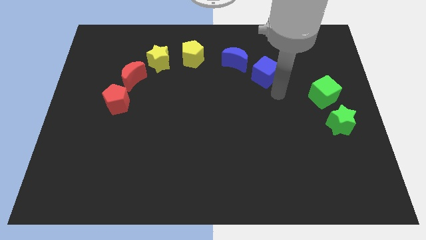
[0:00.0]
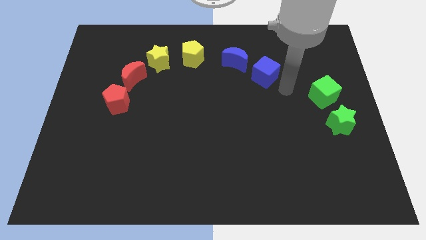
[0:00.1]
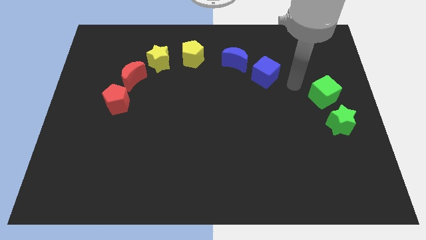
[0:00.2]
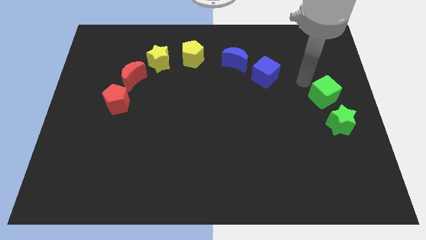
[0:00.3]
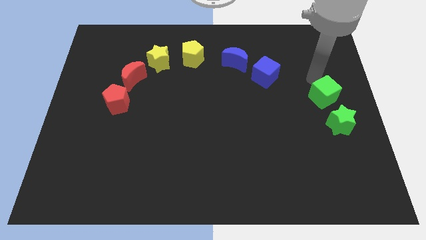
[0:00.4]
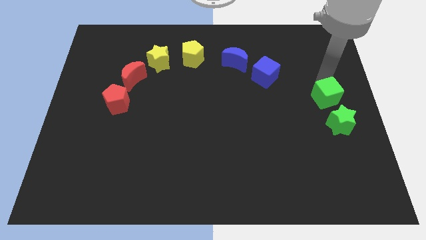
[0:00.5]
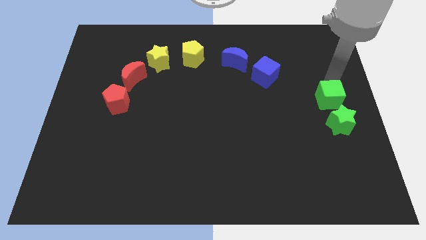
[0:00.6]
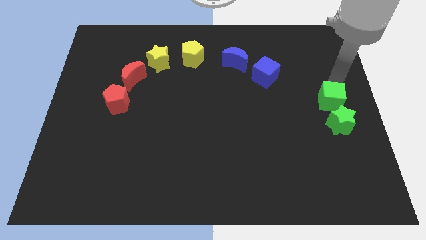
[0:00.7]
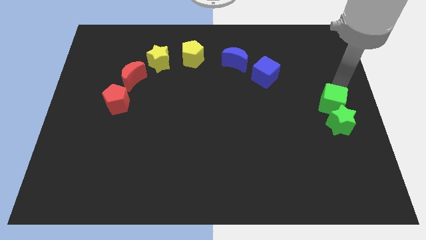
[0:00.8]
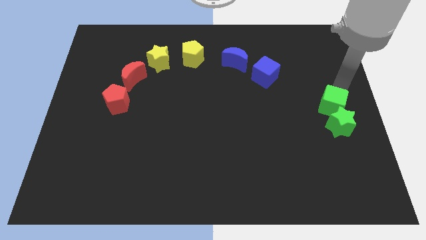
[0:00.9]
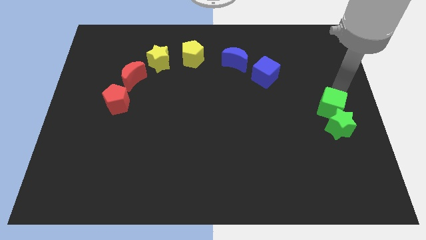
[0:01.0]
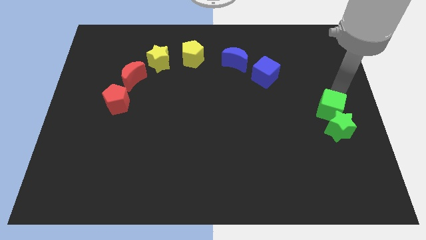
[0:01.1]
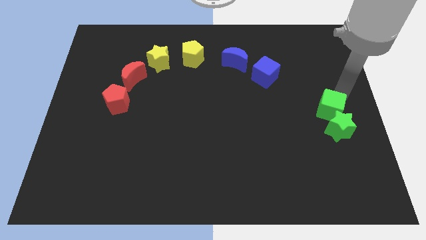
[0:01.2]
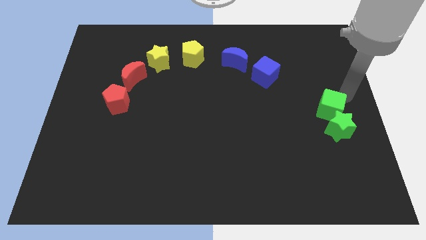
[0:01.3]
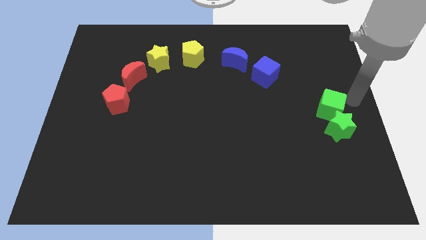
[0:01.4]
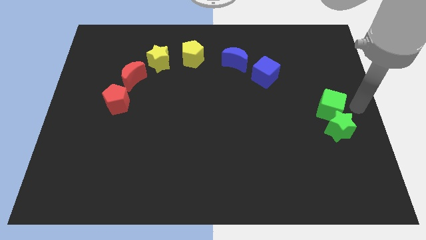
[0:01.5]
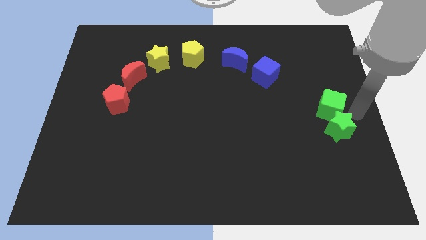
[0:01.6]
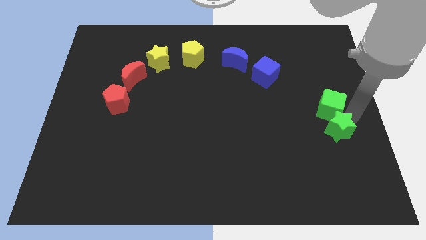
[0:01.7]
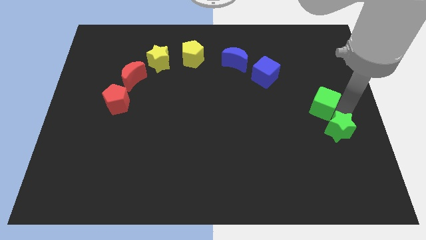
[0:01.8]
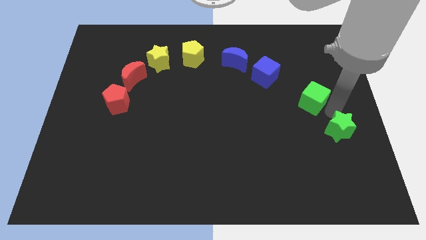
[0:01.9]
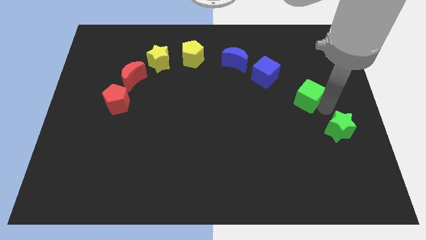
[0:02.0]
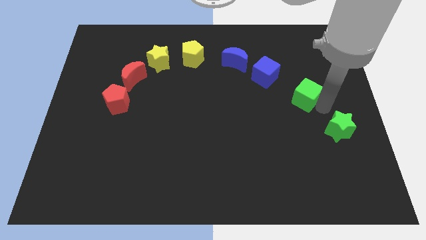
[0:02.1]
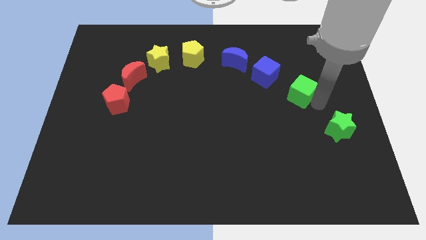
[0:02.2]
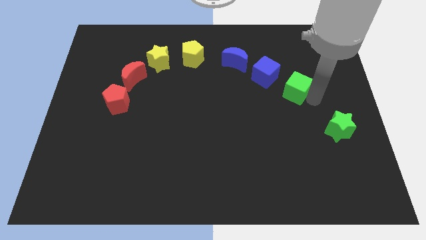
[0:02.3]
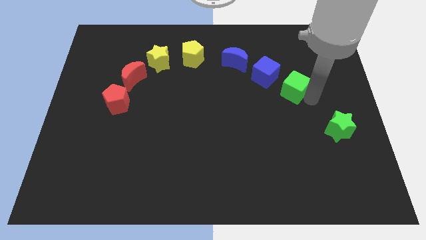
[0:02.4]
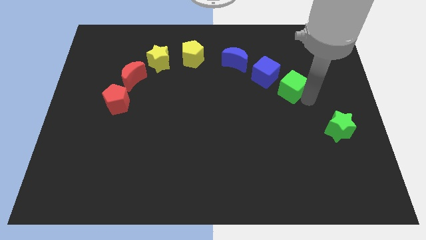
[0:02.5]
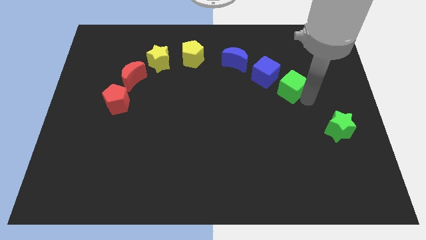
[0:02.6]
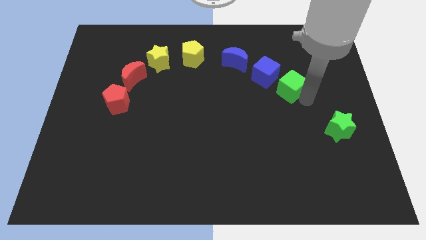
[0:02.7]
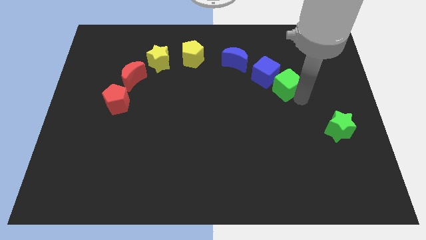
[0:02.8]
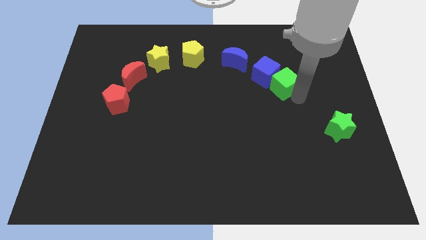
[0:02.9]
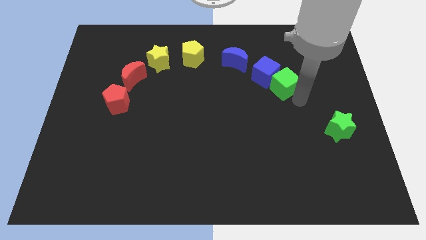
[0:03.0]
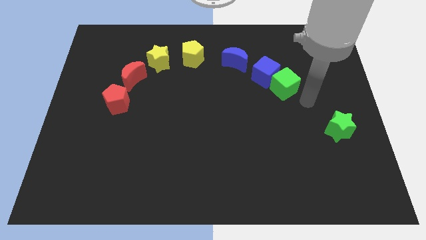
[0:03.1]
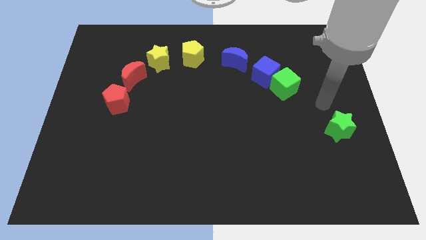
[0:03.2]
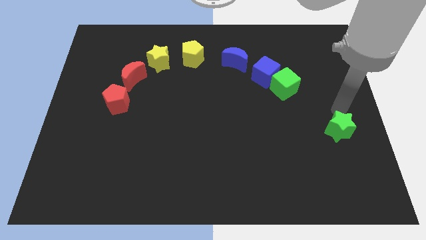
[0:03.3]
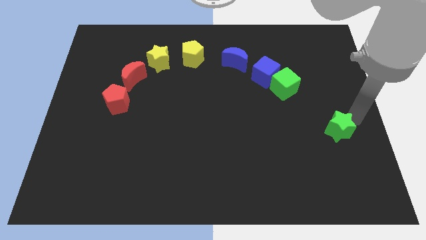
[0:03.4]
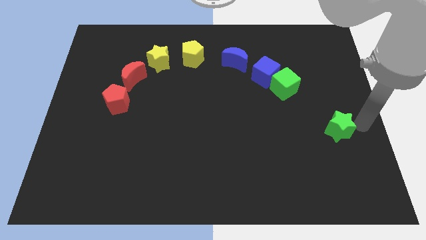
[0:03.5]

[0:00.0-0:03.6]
place the green cube near the blue cube

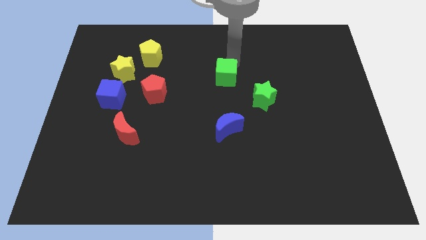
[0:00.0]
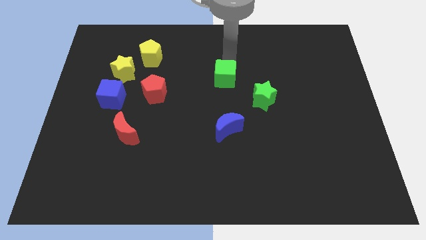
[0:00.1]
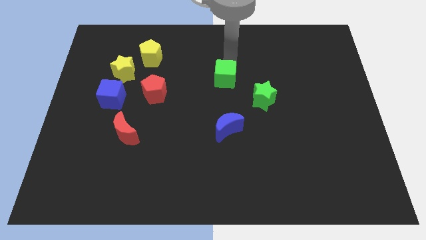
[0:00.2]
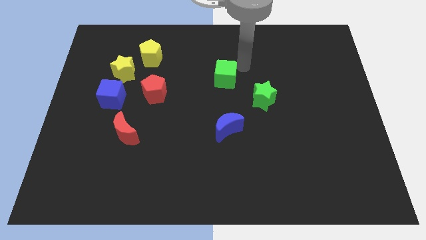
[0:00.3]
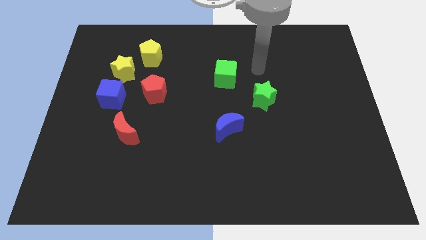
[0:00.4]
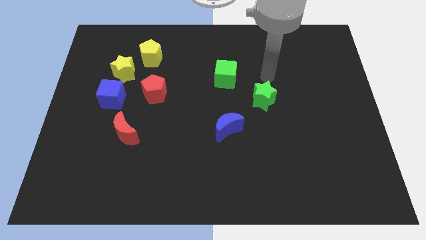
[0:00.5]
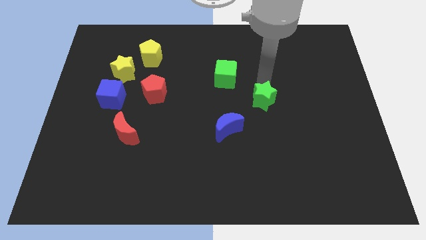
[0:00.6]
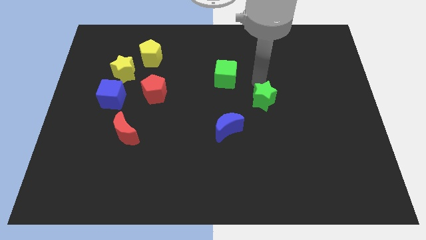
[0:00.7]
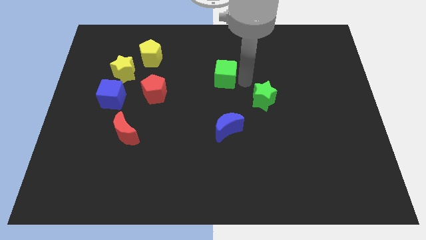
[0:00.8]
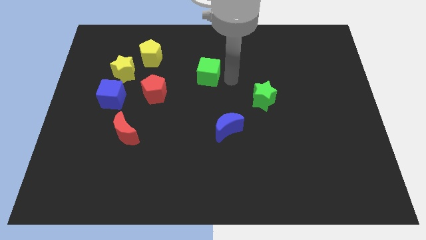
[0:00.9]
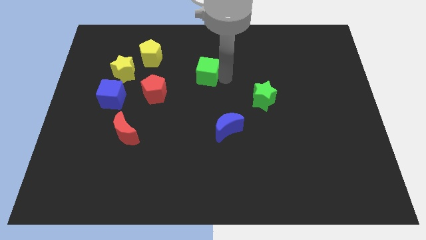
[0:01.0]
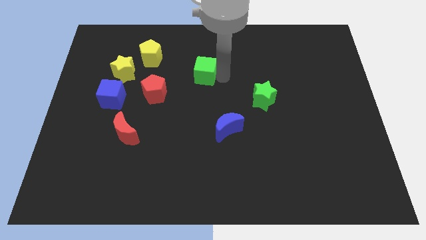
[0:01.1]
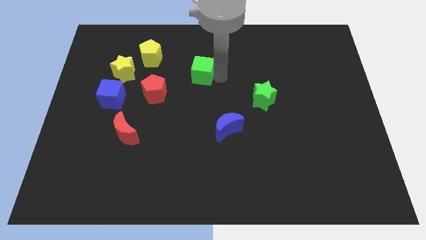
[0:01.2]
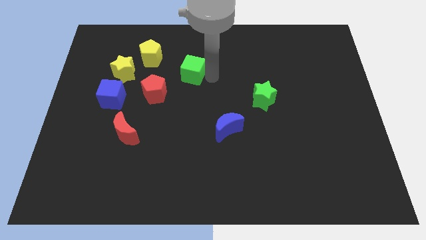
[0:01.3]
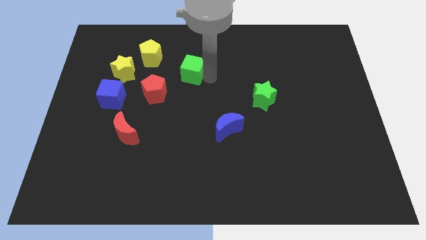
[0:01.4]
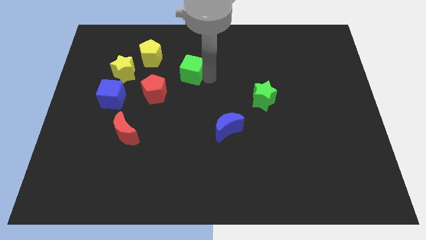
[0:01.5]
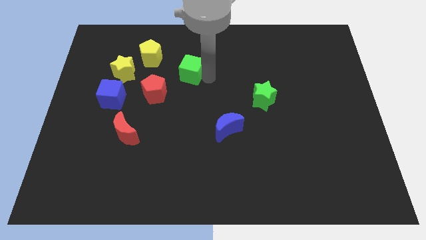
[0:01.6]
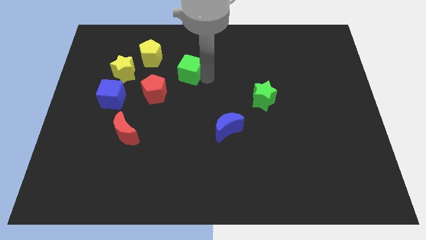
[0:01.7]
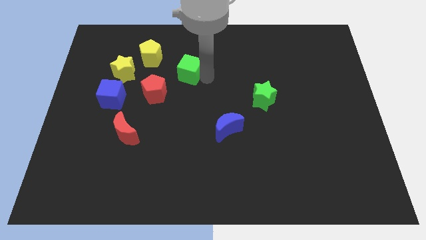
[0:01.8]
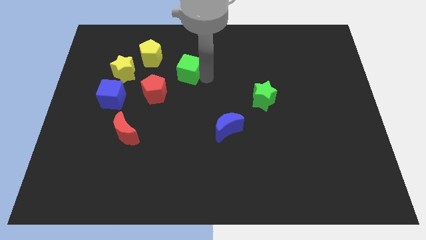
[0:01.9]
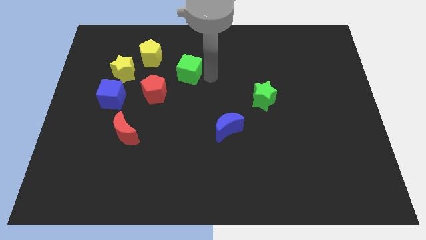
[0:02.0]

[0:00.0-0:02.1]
move the green cube to the right of yellow and red pentagons

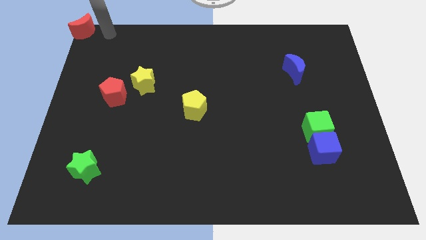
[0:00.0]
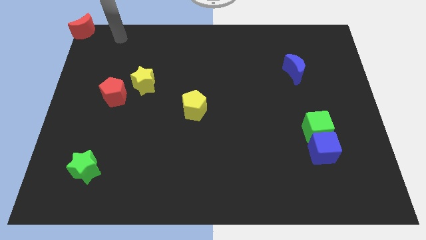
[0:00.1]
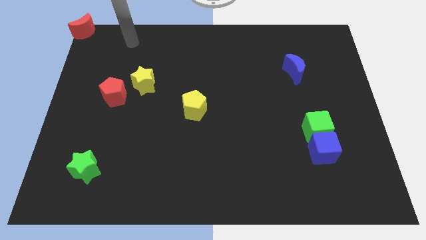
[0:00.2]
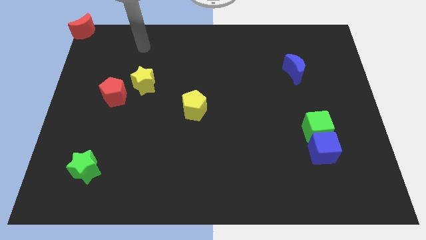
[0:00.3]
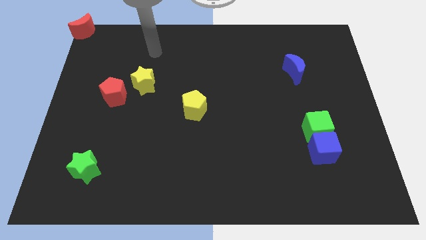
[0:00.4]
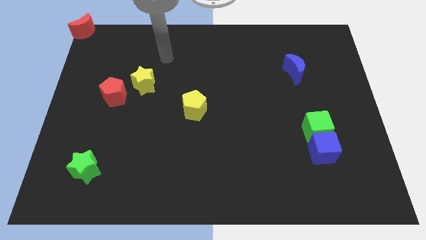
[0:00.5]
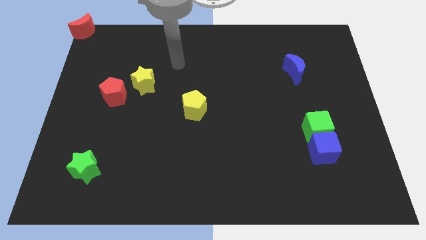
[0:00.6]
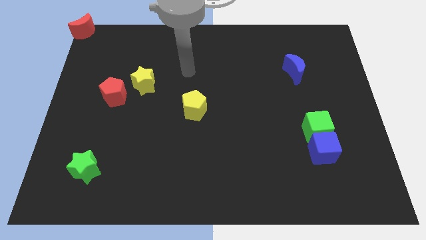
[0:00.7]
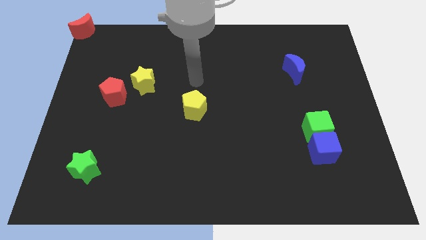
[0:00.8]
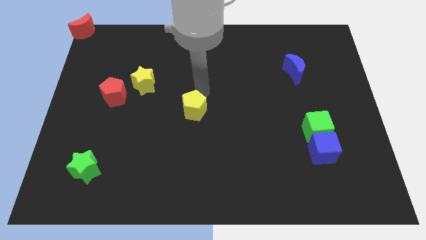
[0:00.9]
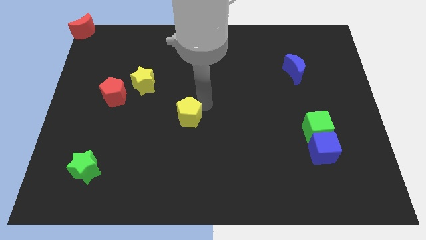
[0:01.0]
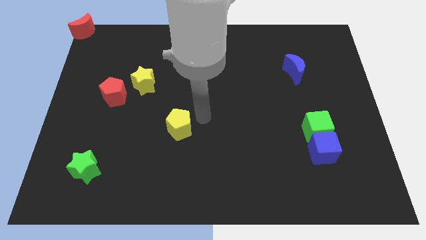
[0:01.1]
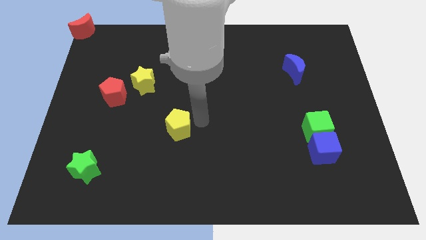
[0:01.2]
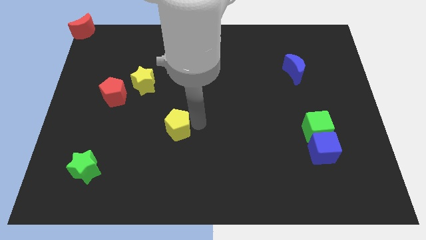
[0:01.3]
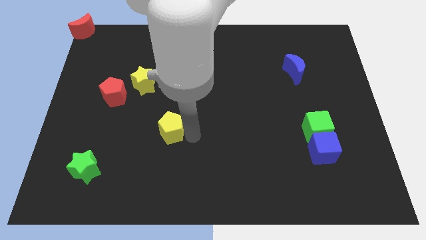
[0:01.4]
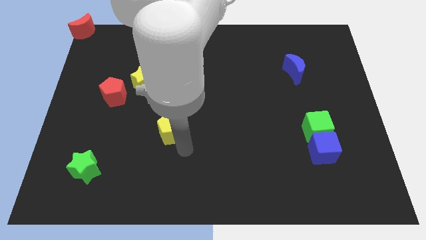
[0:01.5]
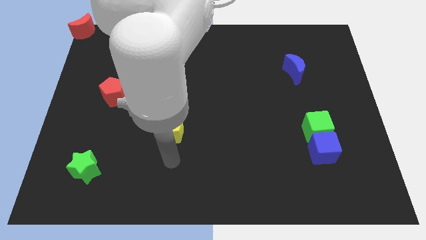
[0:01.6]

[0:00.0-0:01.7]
push the yellow pentagon slightly towards the bottom of the board

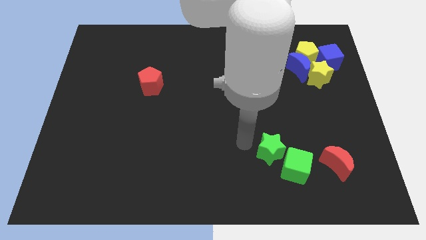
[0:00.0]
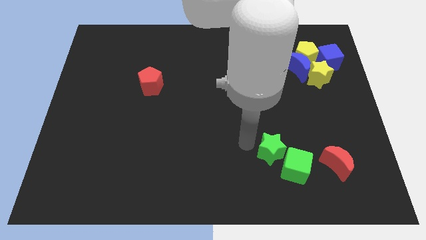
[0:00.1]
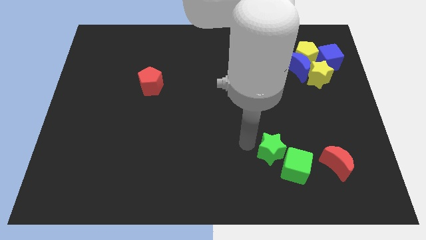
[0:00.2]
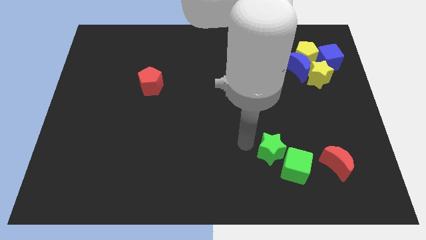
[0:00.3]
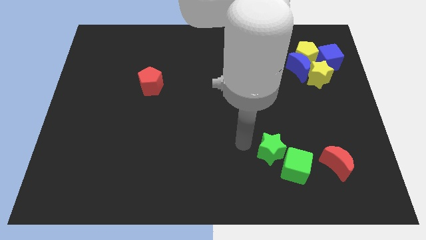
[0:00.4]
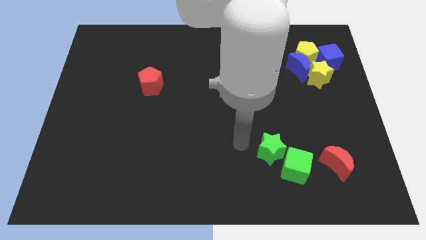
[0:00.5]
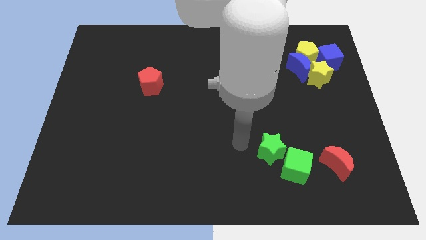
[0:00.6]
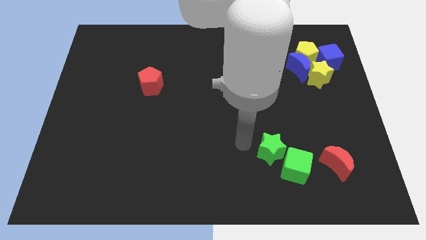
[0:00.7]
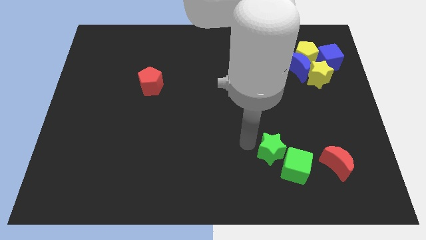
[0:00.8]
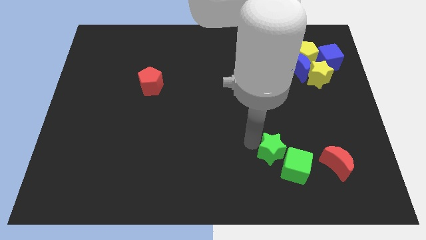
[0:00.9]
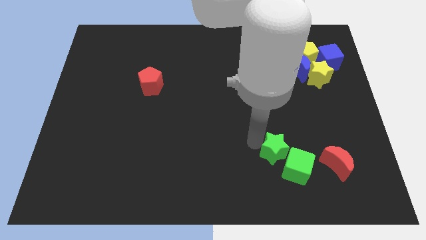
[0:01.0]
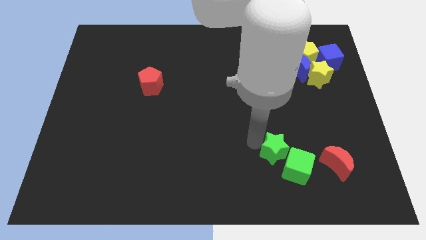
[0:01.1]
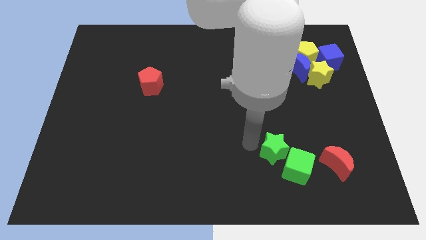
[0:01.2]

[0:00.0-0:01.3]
move the green star closer to the green cube

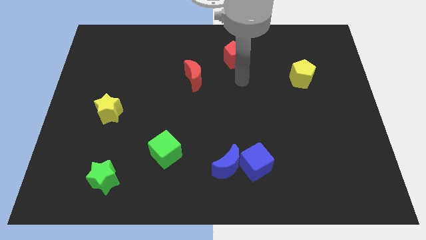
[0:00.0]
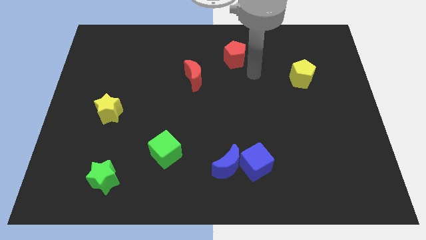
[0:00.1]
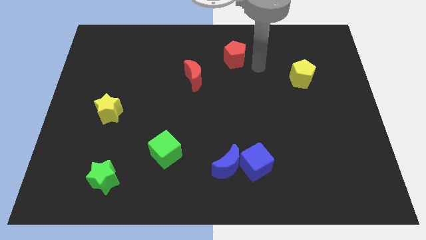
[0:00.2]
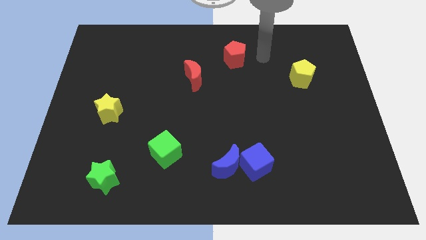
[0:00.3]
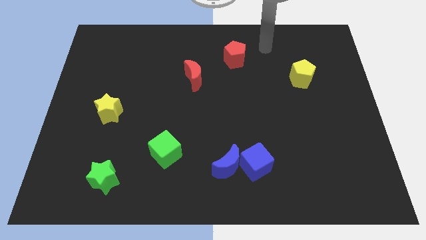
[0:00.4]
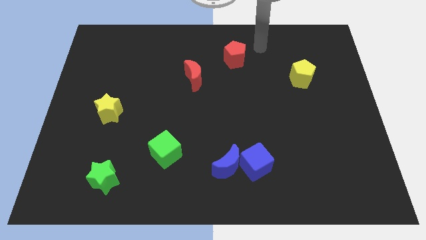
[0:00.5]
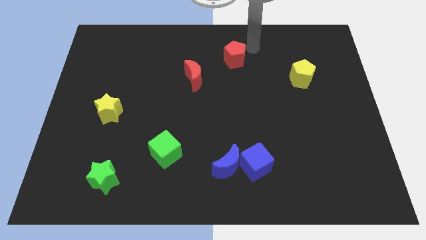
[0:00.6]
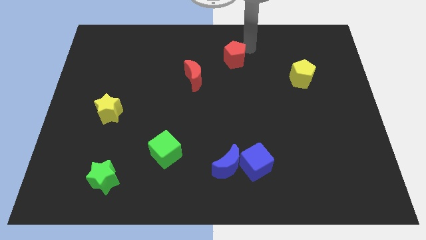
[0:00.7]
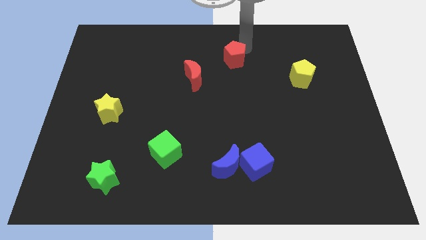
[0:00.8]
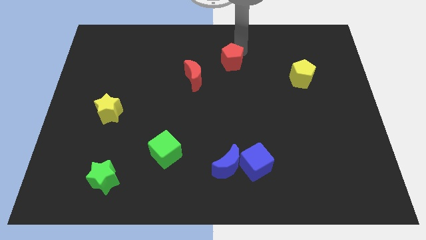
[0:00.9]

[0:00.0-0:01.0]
tap red pentagon
